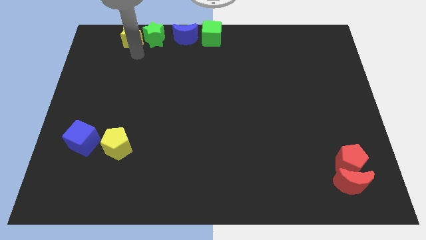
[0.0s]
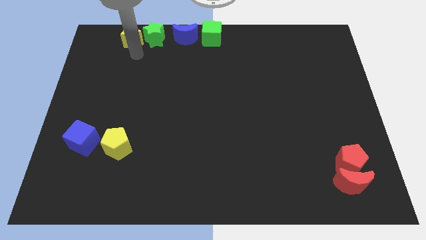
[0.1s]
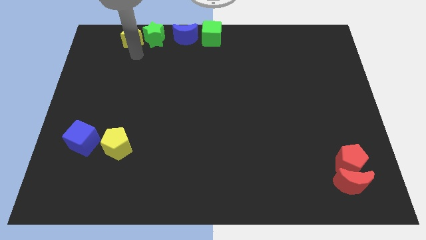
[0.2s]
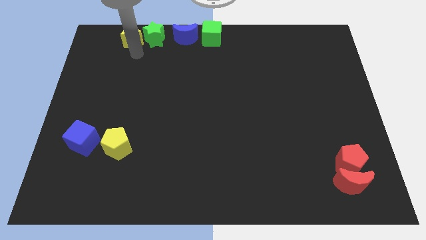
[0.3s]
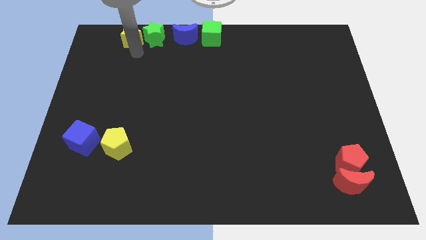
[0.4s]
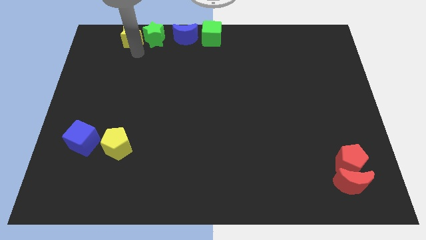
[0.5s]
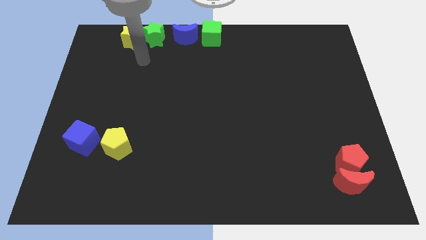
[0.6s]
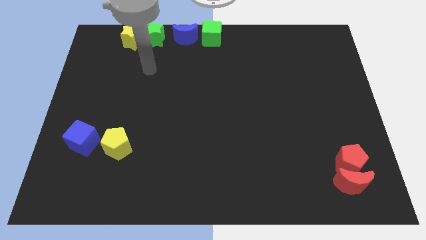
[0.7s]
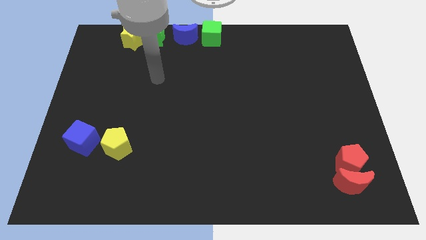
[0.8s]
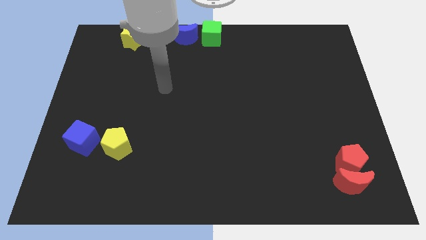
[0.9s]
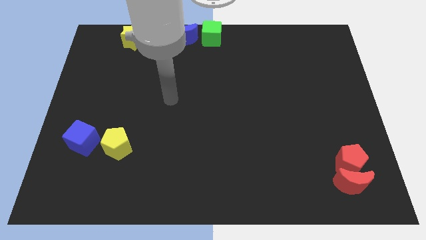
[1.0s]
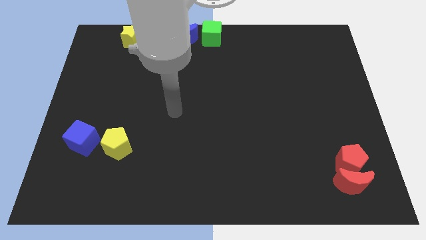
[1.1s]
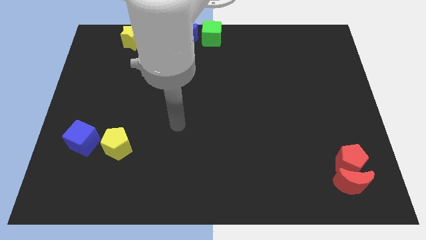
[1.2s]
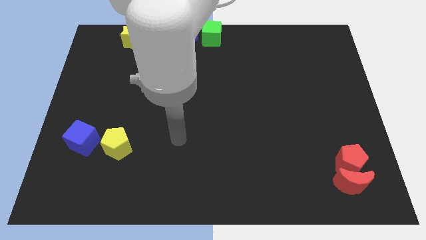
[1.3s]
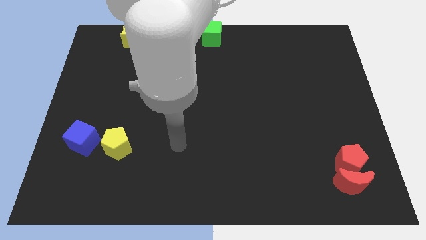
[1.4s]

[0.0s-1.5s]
move the arm away from the yellow star

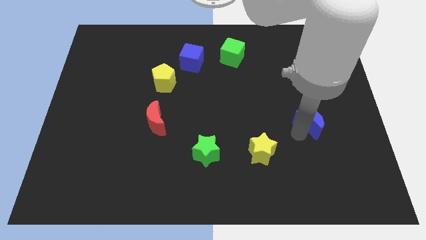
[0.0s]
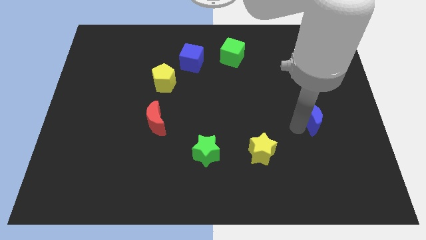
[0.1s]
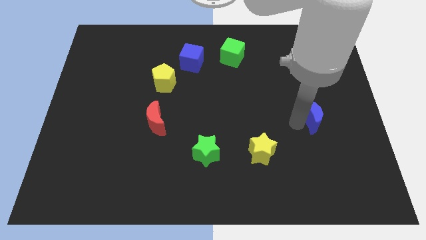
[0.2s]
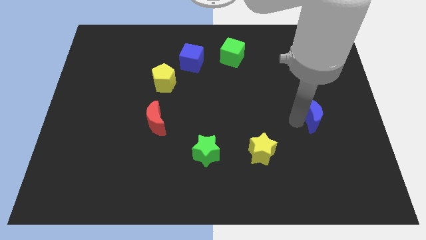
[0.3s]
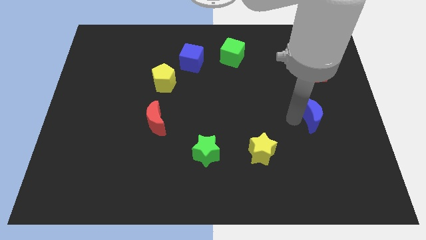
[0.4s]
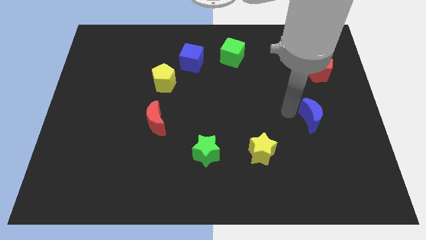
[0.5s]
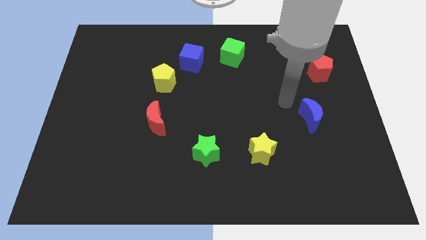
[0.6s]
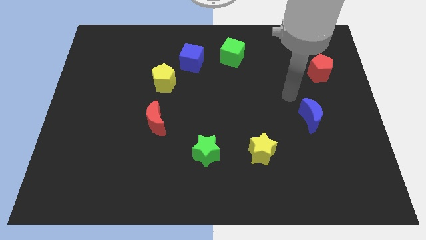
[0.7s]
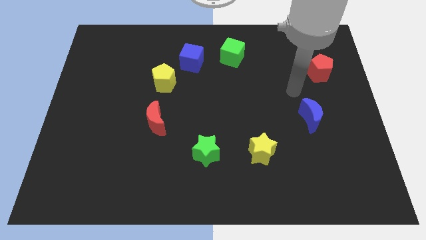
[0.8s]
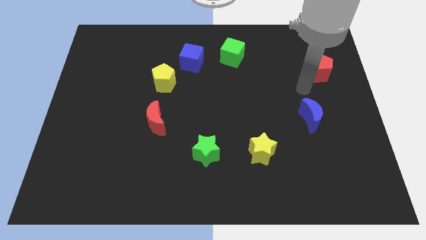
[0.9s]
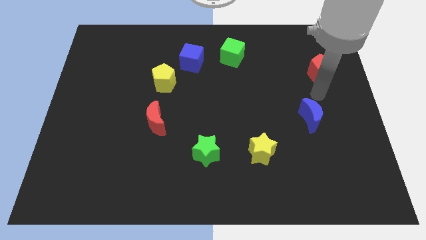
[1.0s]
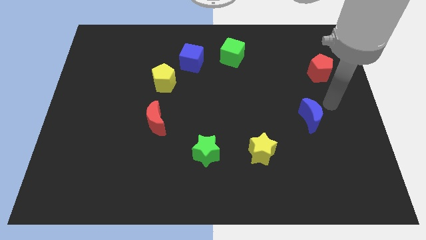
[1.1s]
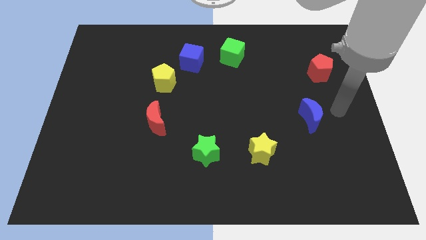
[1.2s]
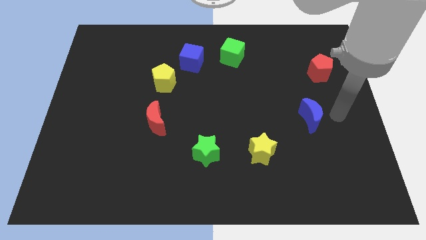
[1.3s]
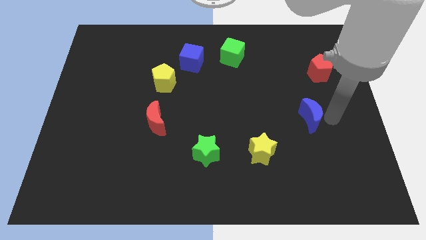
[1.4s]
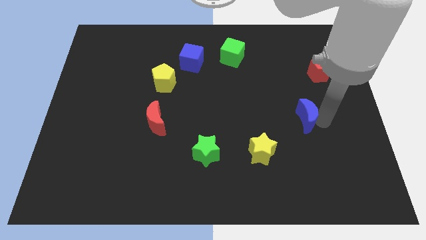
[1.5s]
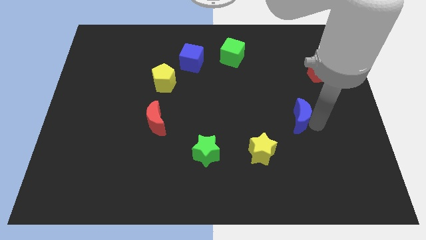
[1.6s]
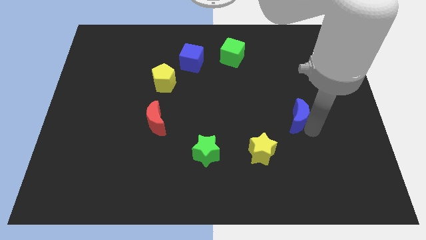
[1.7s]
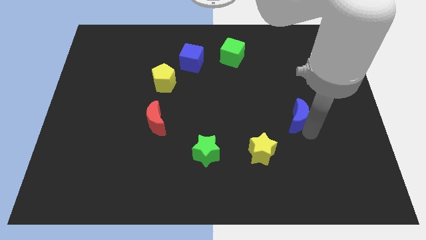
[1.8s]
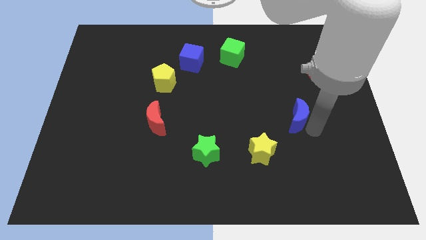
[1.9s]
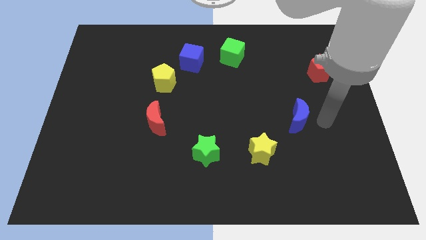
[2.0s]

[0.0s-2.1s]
slide the blue moon diagonally to the yellow star

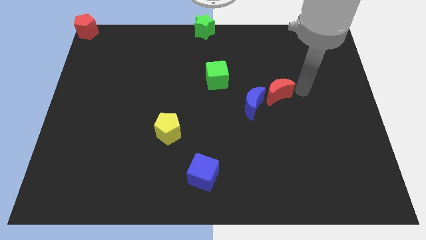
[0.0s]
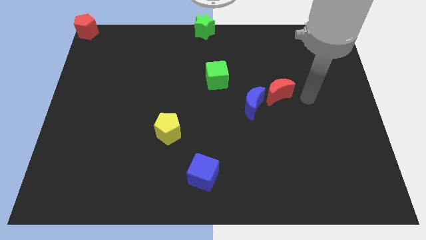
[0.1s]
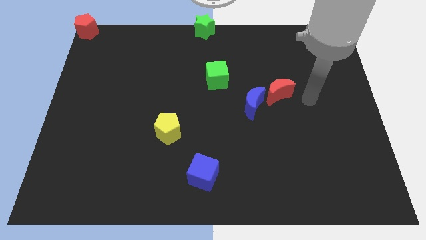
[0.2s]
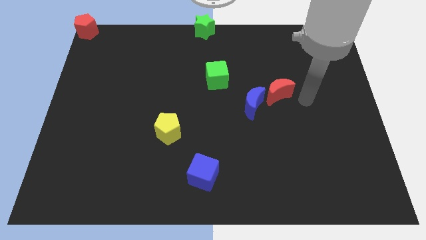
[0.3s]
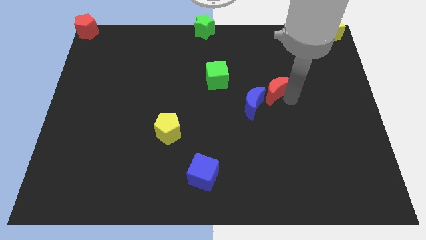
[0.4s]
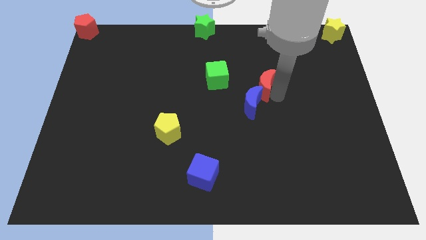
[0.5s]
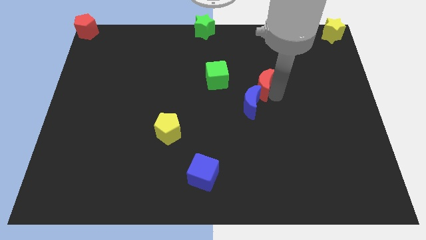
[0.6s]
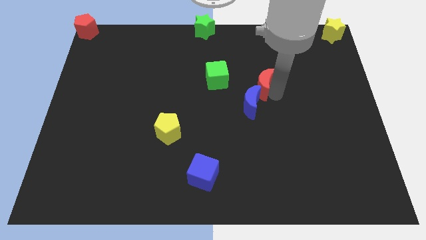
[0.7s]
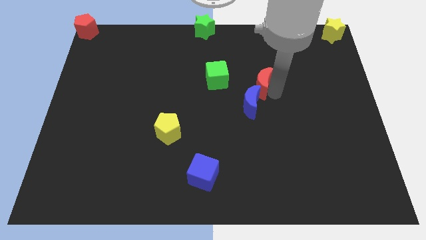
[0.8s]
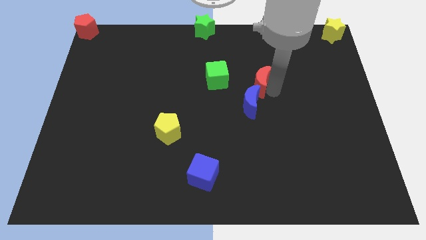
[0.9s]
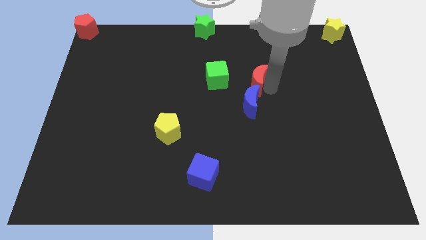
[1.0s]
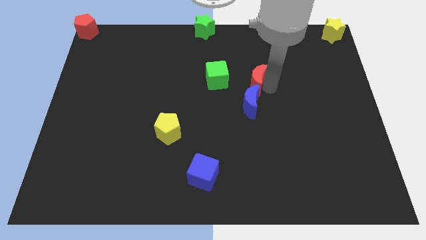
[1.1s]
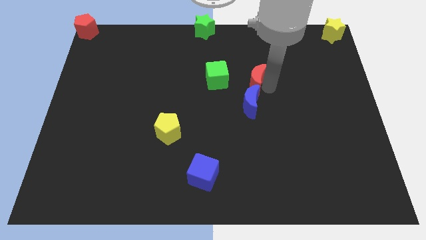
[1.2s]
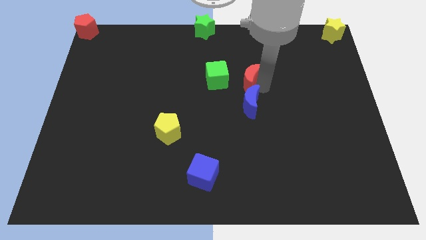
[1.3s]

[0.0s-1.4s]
move the red crescent to the top side of the blue crescent

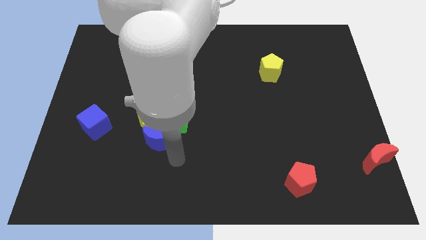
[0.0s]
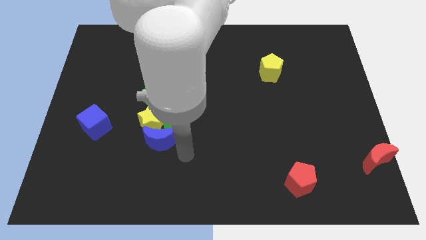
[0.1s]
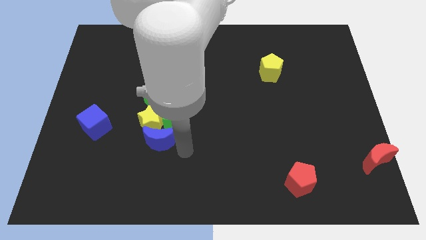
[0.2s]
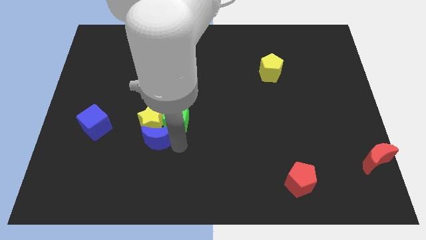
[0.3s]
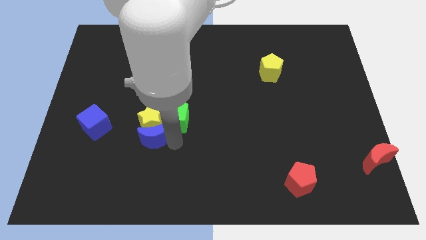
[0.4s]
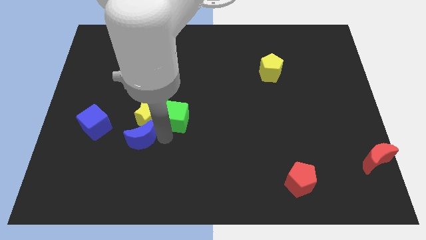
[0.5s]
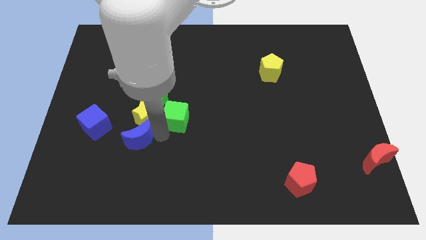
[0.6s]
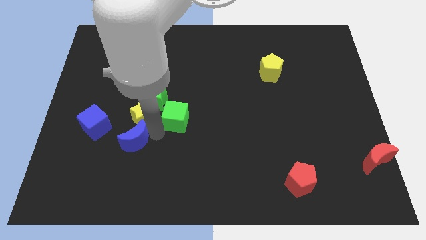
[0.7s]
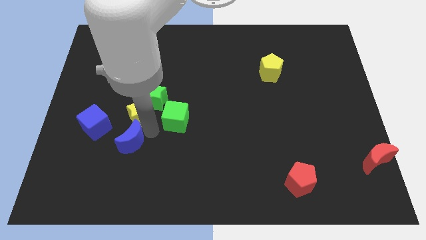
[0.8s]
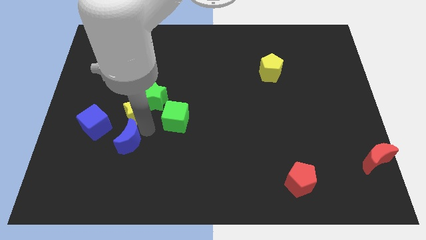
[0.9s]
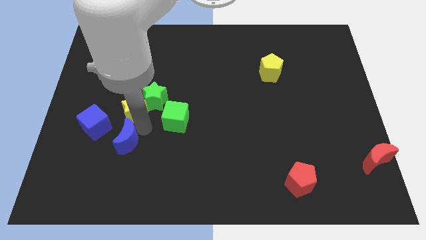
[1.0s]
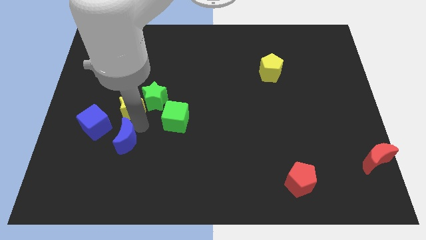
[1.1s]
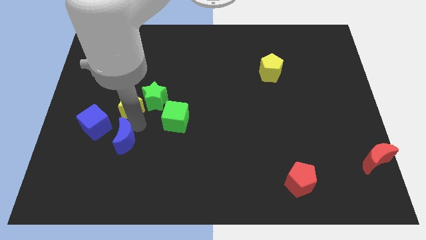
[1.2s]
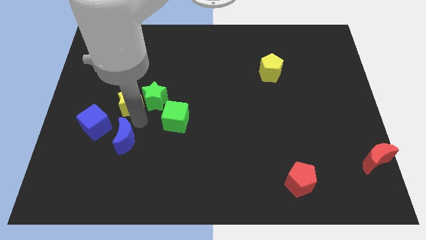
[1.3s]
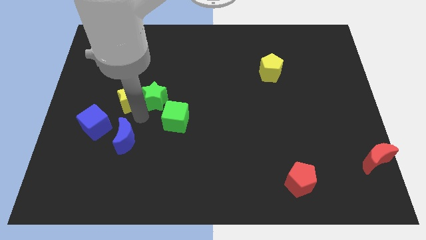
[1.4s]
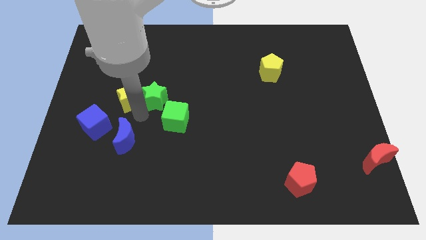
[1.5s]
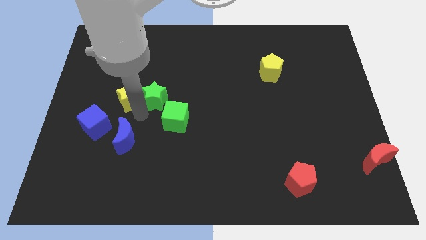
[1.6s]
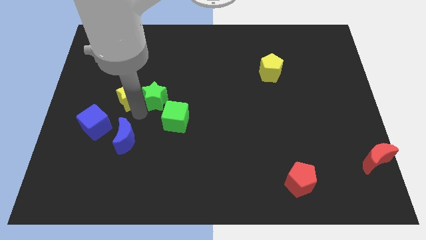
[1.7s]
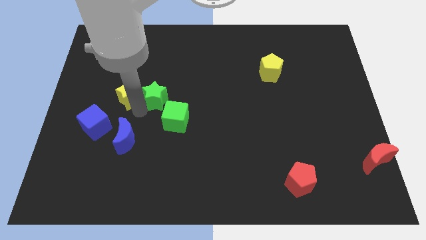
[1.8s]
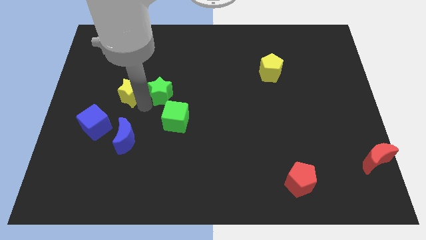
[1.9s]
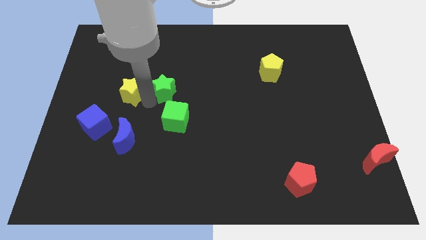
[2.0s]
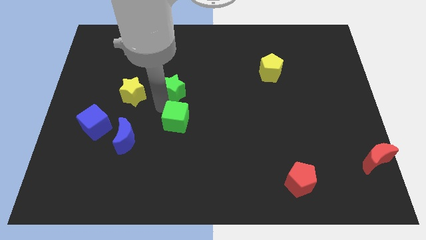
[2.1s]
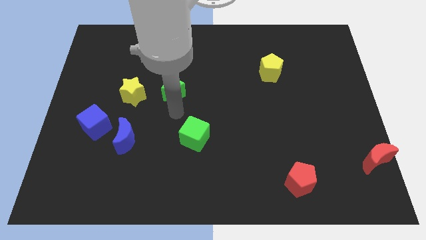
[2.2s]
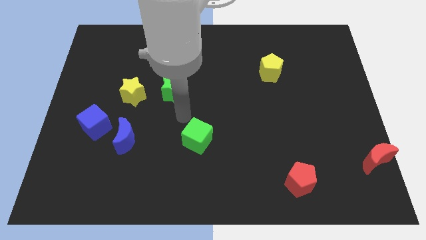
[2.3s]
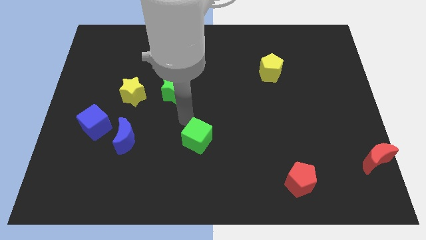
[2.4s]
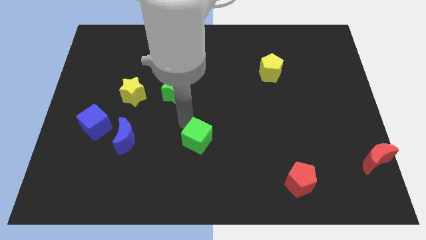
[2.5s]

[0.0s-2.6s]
separate the blue moon green star yellow star and green cube away from each other

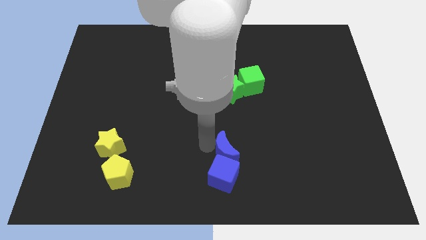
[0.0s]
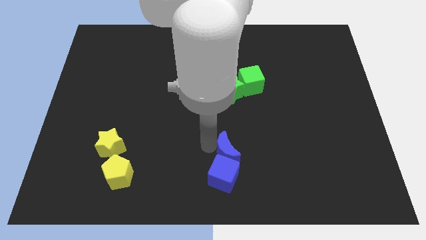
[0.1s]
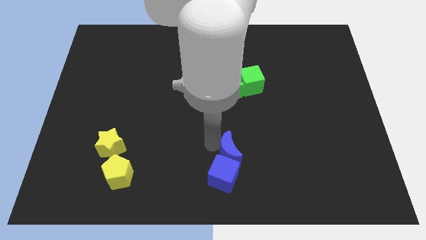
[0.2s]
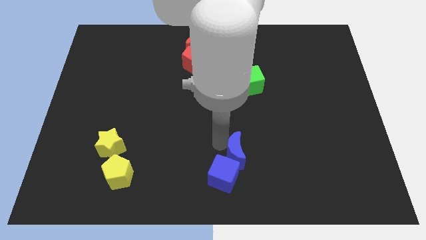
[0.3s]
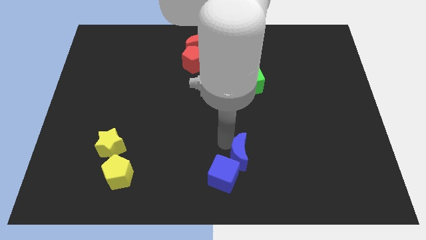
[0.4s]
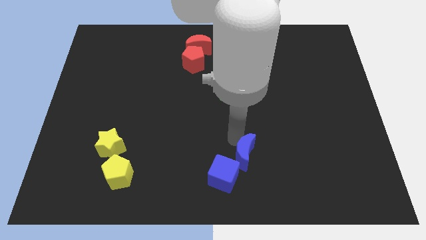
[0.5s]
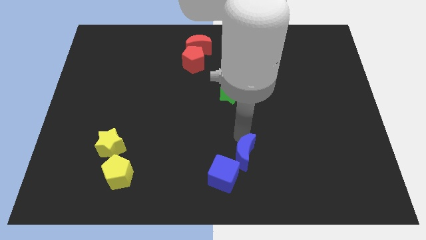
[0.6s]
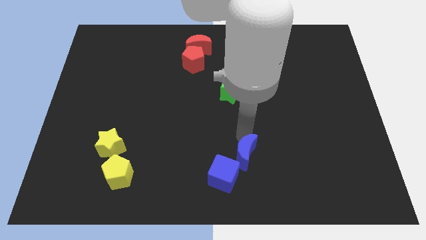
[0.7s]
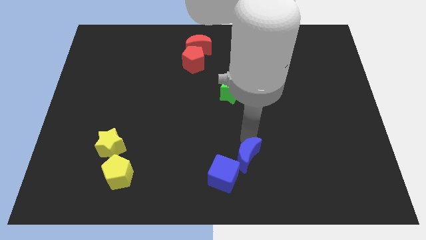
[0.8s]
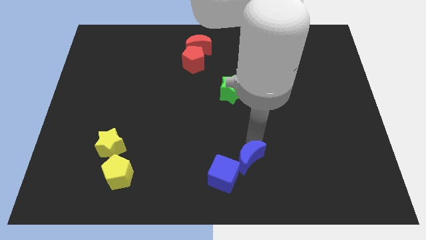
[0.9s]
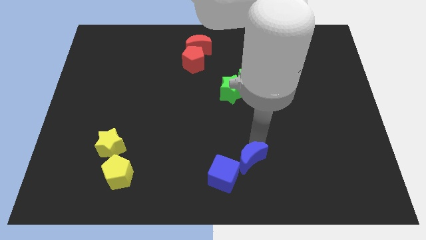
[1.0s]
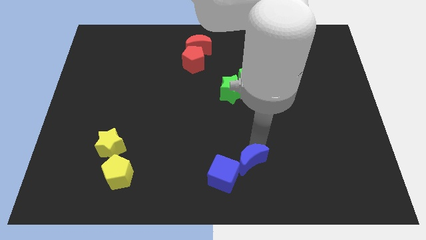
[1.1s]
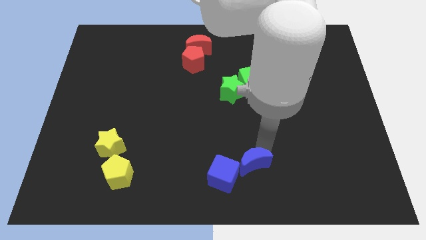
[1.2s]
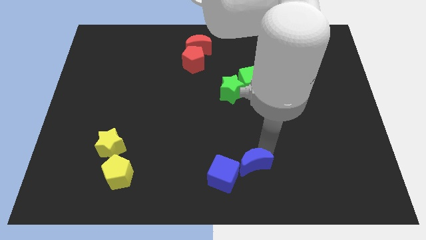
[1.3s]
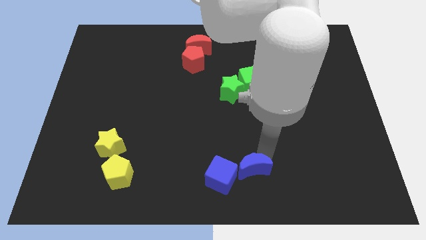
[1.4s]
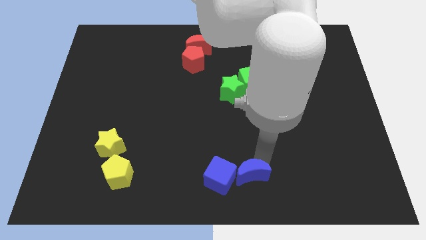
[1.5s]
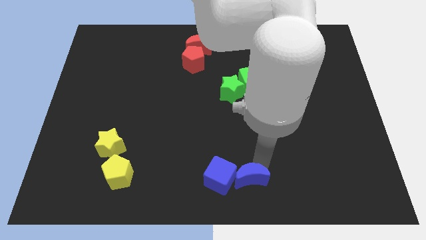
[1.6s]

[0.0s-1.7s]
place the blue moon on the right side of the blue cube
